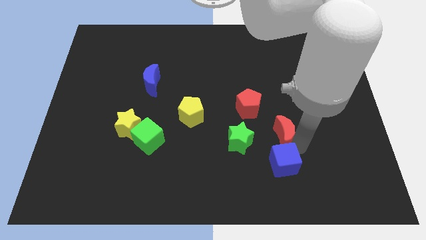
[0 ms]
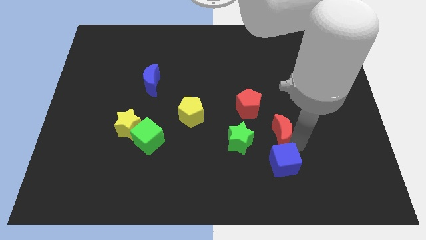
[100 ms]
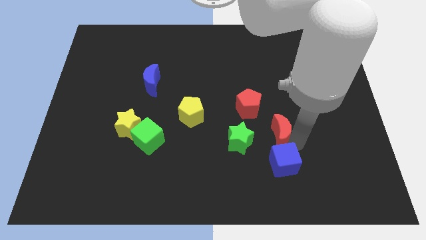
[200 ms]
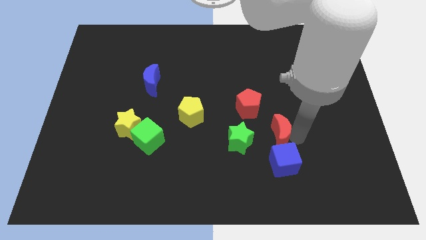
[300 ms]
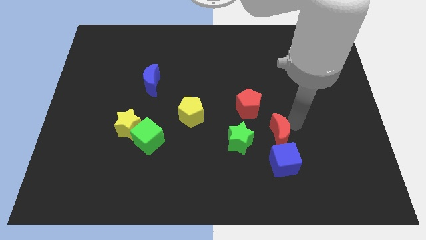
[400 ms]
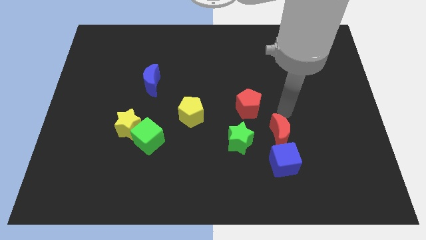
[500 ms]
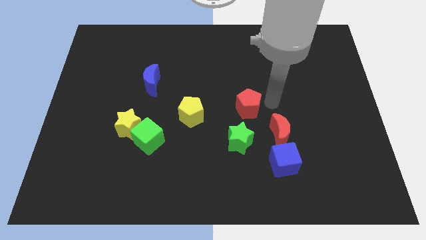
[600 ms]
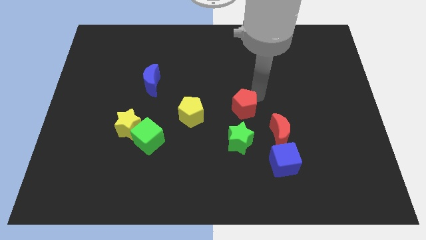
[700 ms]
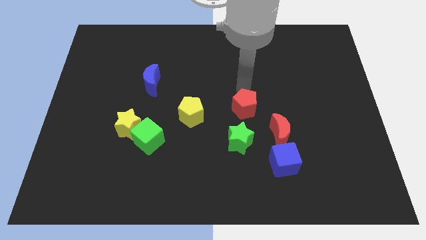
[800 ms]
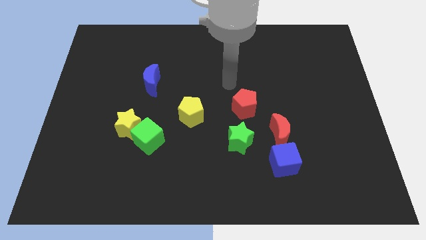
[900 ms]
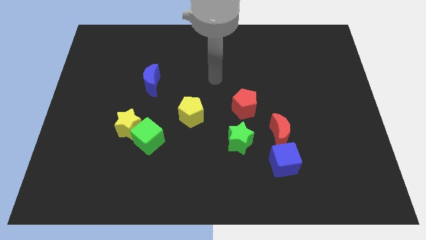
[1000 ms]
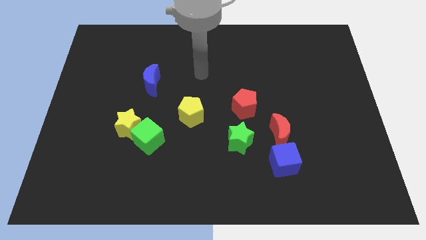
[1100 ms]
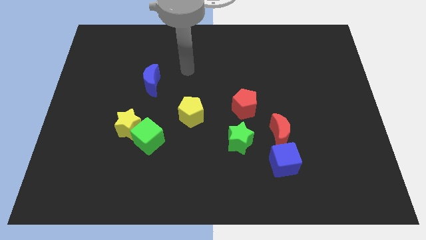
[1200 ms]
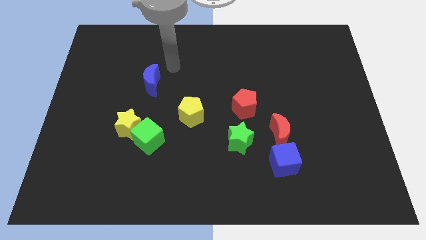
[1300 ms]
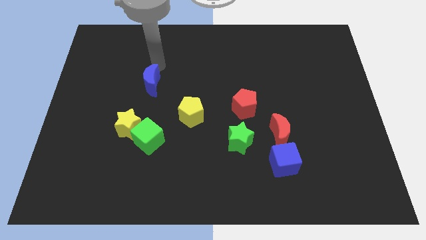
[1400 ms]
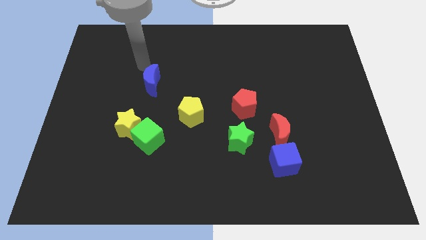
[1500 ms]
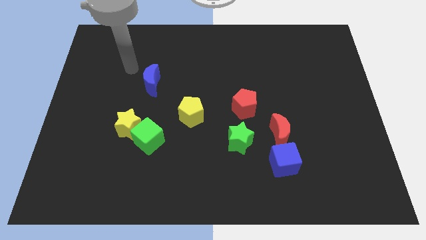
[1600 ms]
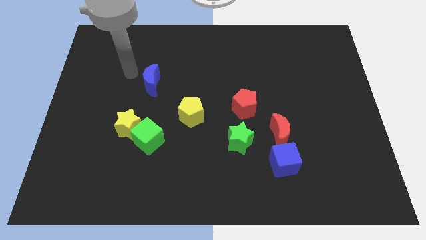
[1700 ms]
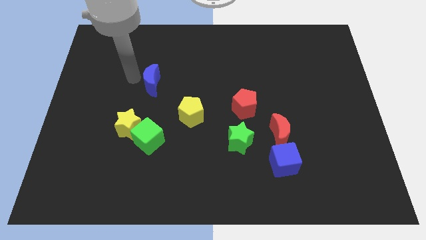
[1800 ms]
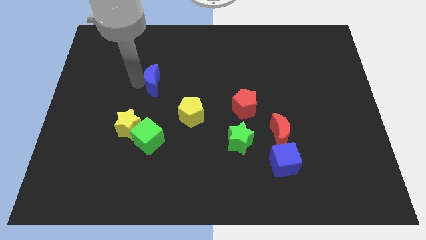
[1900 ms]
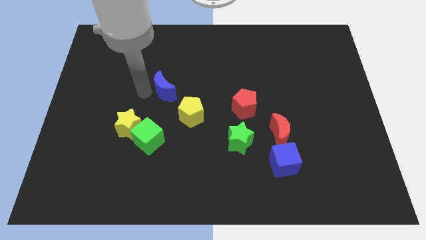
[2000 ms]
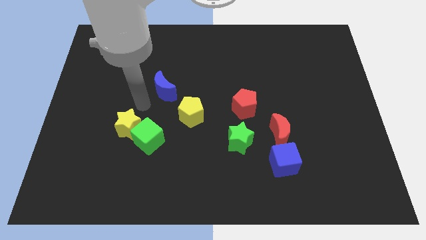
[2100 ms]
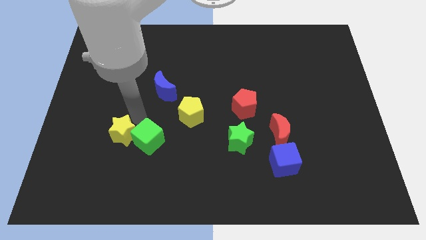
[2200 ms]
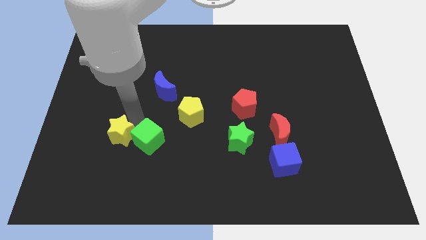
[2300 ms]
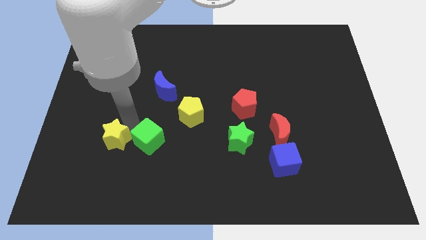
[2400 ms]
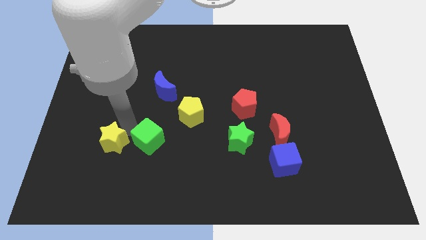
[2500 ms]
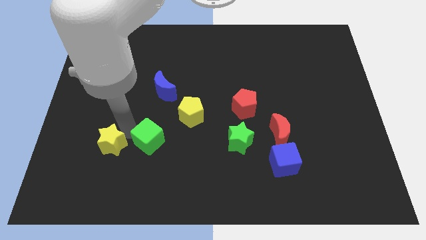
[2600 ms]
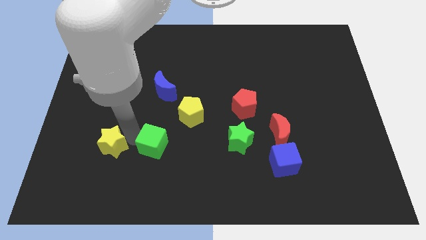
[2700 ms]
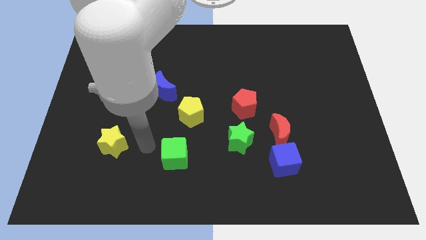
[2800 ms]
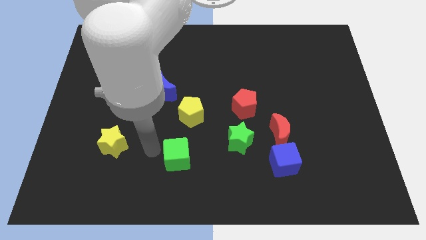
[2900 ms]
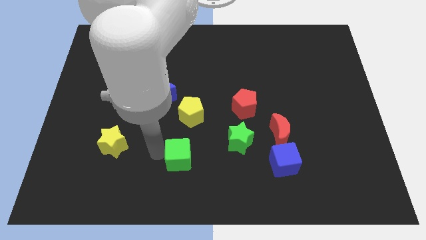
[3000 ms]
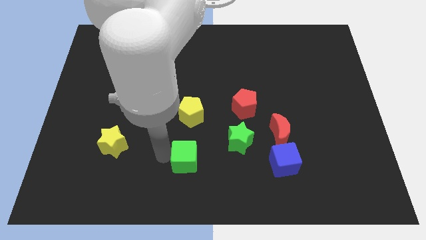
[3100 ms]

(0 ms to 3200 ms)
place the green cube down to the yellow pentagon

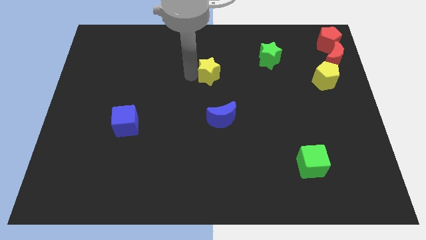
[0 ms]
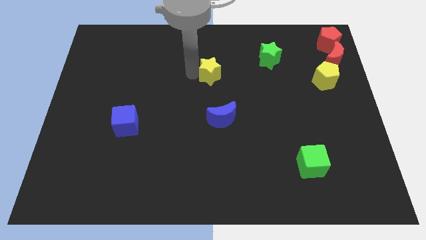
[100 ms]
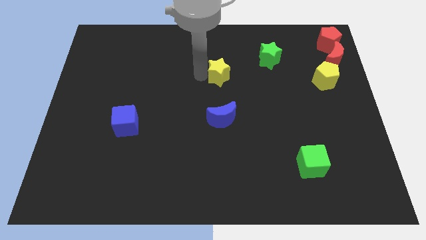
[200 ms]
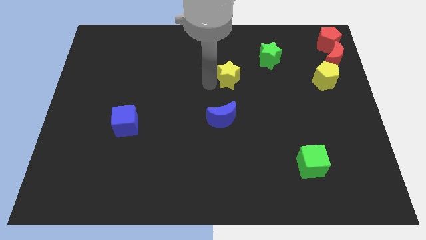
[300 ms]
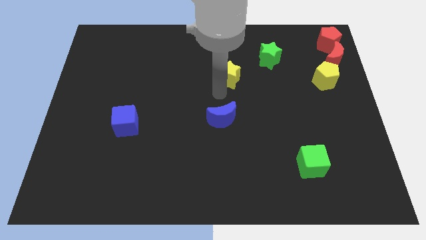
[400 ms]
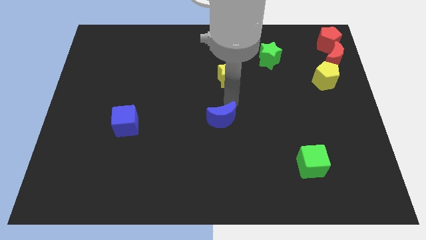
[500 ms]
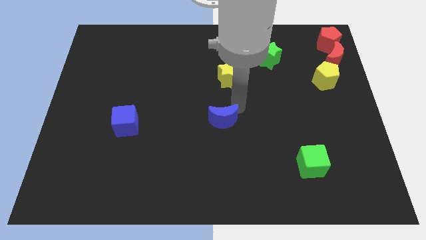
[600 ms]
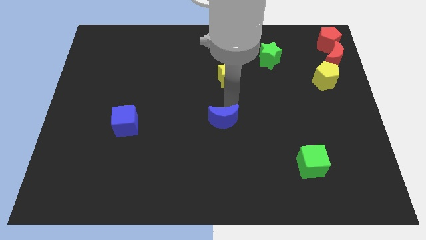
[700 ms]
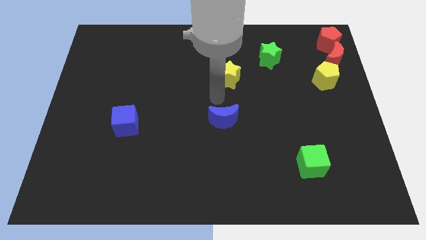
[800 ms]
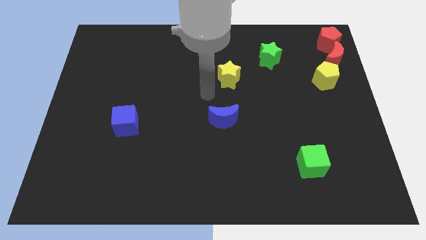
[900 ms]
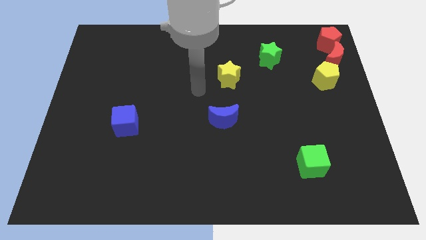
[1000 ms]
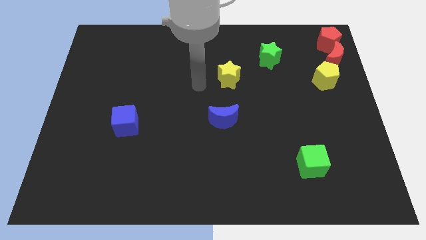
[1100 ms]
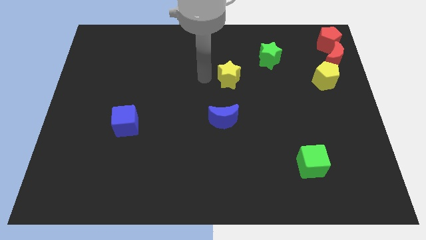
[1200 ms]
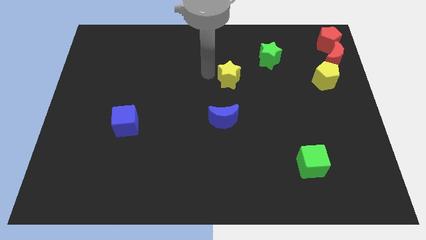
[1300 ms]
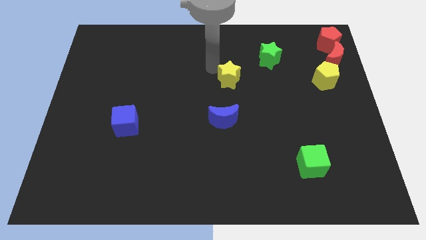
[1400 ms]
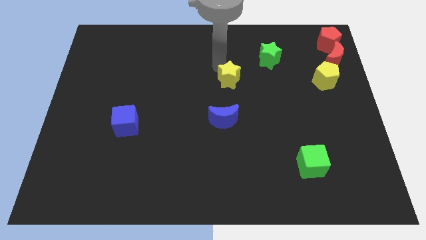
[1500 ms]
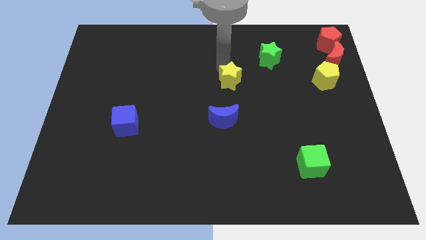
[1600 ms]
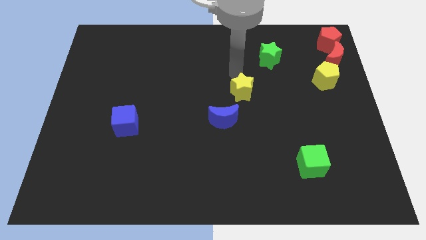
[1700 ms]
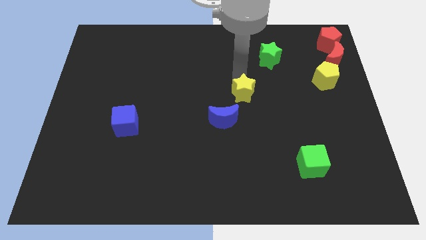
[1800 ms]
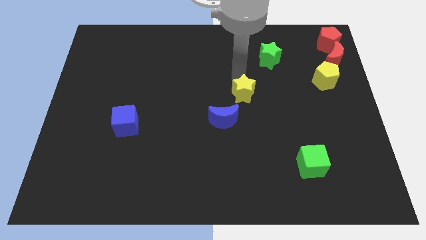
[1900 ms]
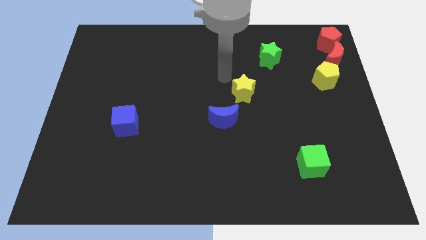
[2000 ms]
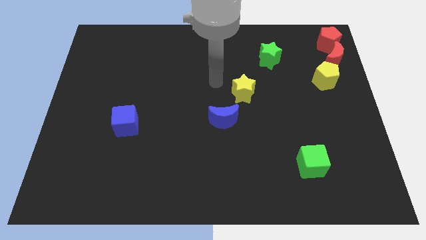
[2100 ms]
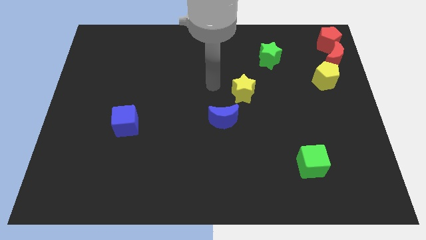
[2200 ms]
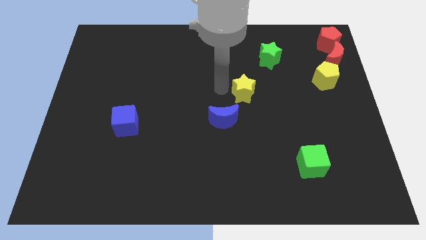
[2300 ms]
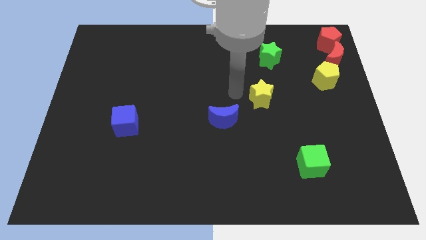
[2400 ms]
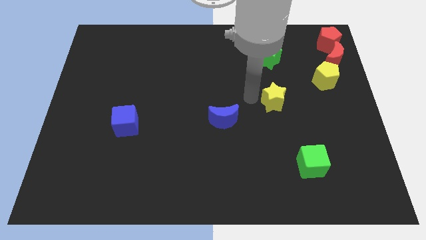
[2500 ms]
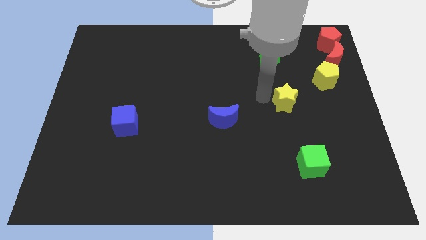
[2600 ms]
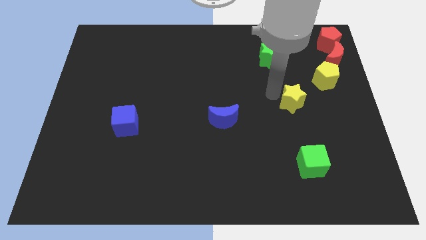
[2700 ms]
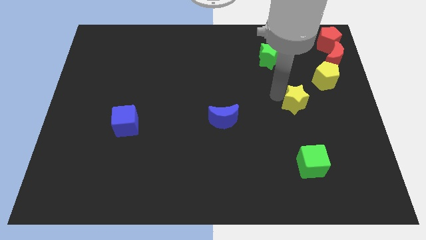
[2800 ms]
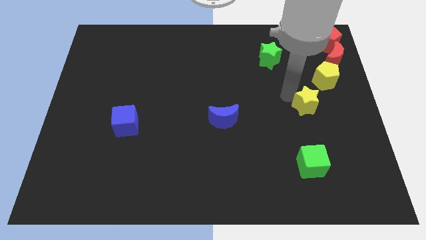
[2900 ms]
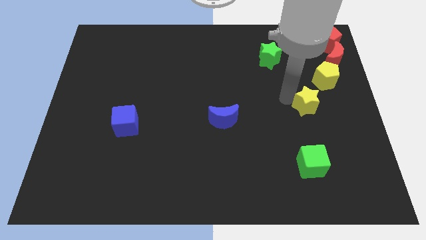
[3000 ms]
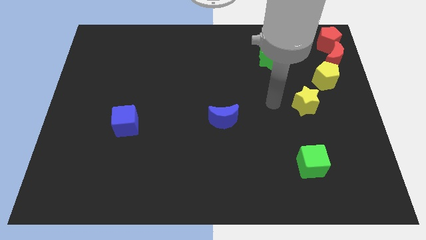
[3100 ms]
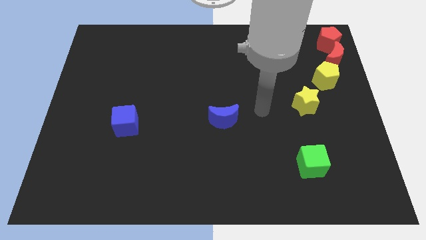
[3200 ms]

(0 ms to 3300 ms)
place the yellow star above the green cube

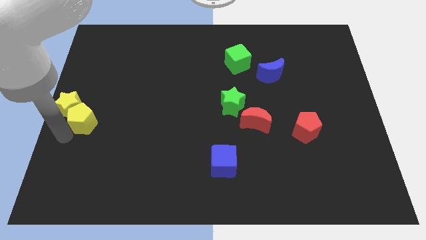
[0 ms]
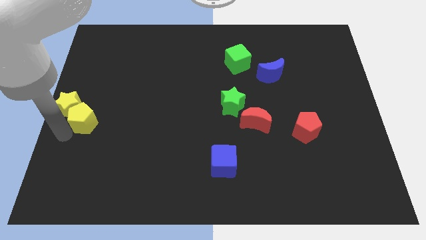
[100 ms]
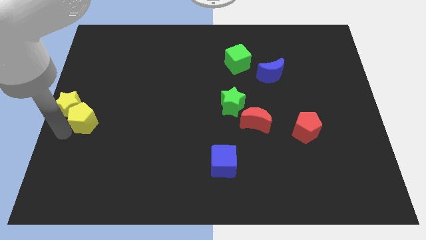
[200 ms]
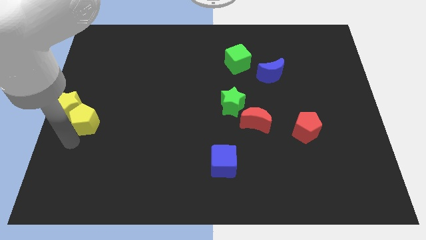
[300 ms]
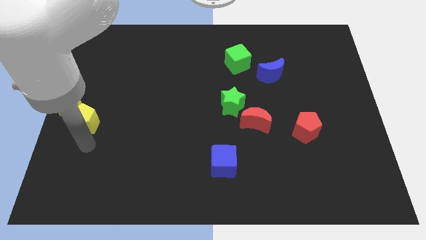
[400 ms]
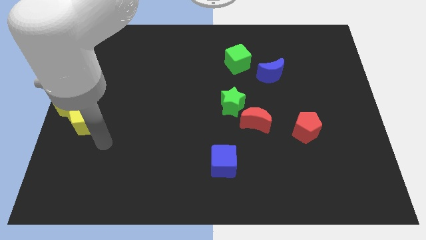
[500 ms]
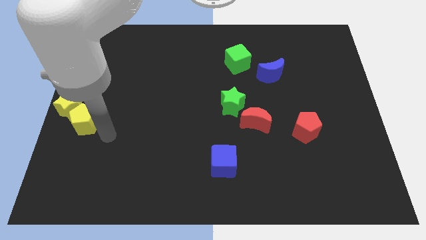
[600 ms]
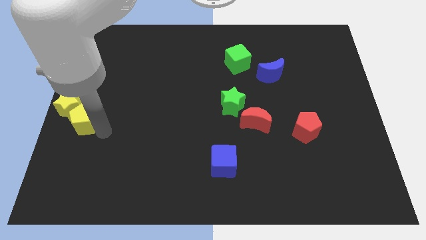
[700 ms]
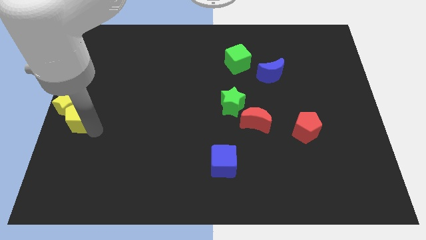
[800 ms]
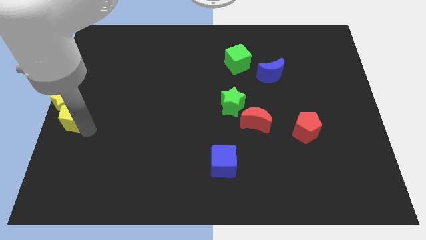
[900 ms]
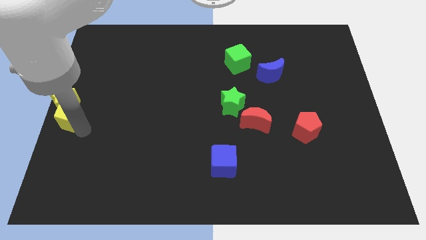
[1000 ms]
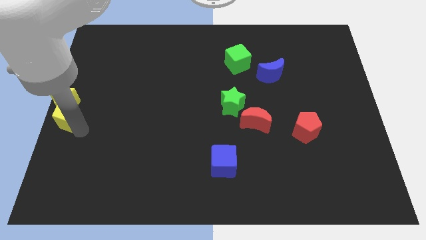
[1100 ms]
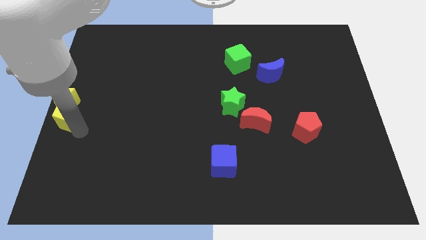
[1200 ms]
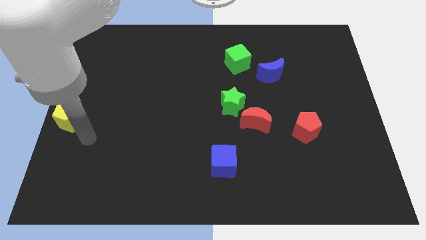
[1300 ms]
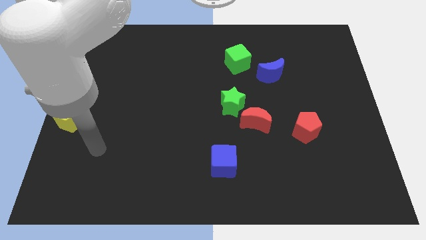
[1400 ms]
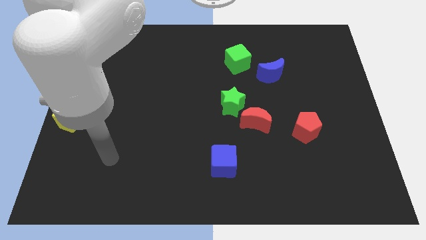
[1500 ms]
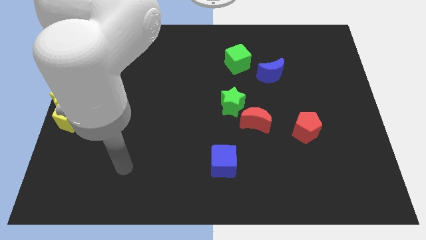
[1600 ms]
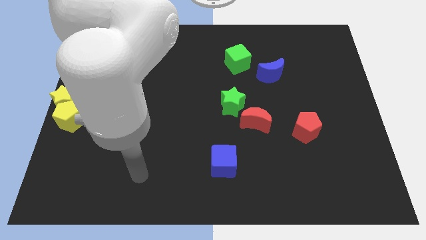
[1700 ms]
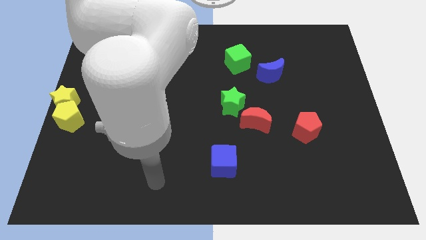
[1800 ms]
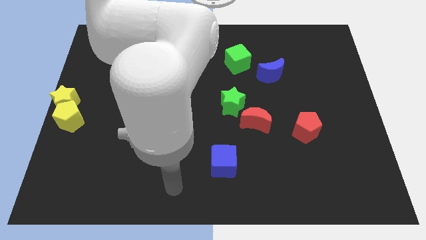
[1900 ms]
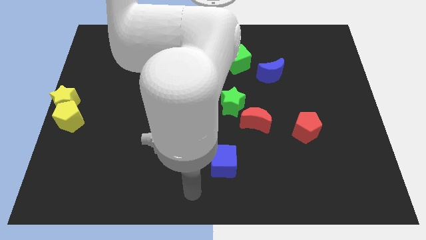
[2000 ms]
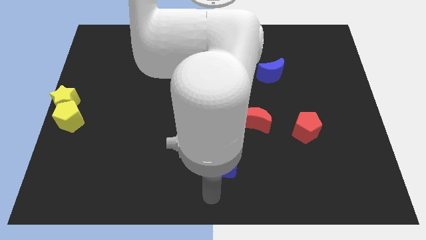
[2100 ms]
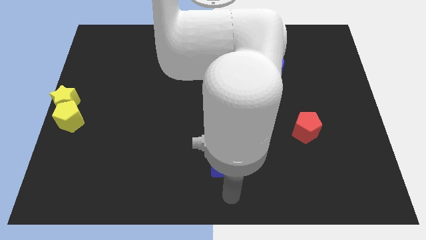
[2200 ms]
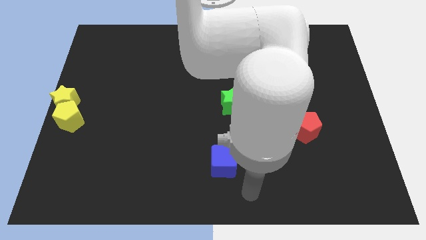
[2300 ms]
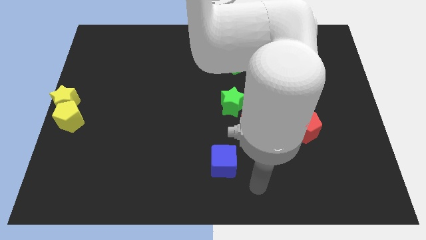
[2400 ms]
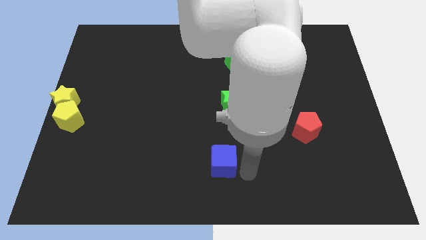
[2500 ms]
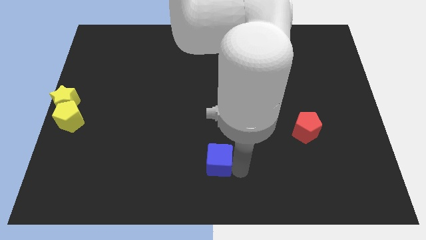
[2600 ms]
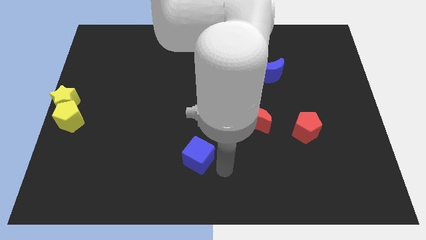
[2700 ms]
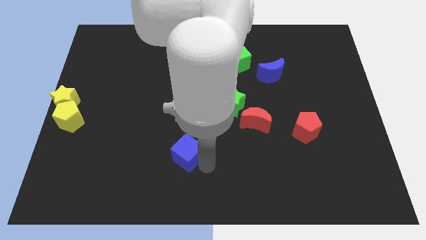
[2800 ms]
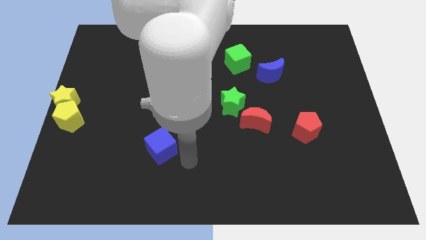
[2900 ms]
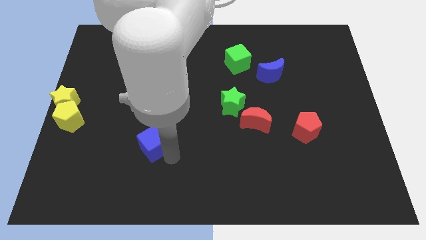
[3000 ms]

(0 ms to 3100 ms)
move the blue cube towards the yellow blocks
